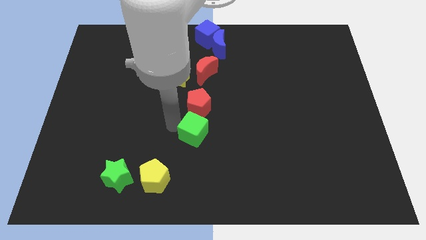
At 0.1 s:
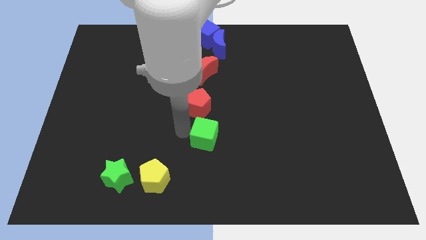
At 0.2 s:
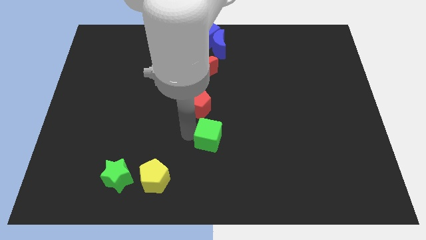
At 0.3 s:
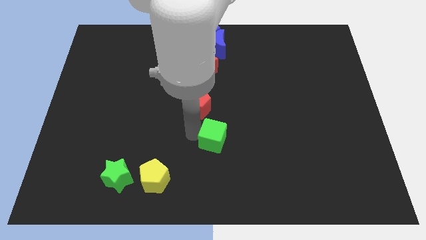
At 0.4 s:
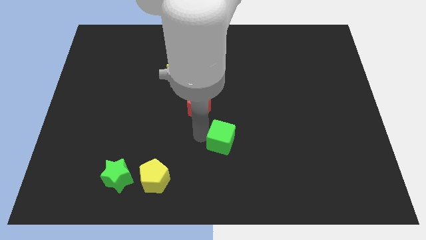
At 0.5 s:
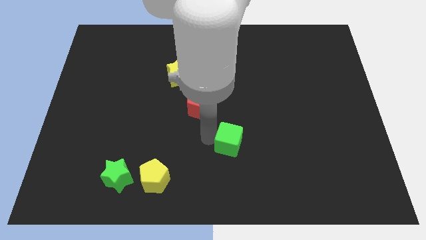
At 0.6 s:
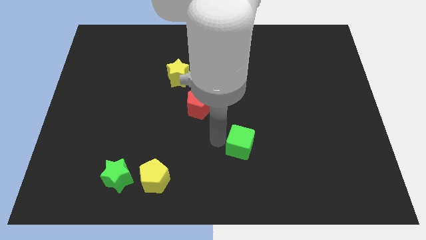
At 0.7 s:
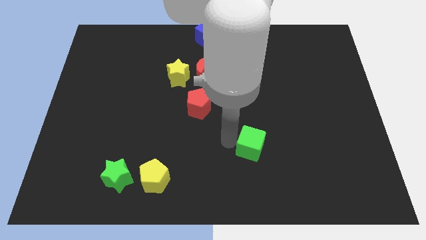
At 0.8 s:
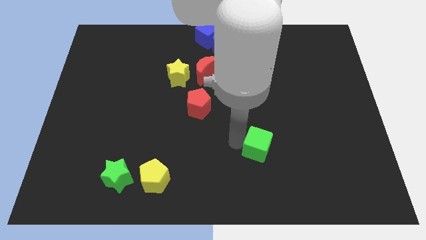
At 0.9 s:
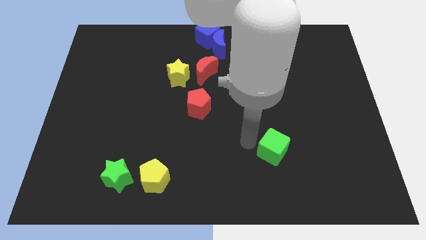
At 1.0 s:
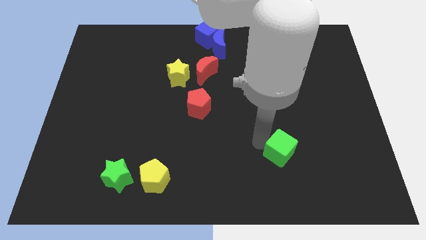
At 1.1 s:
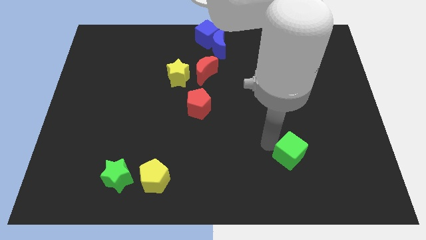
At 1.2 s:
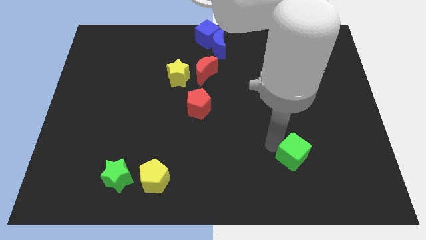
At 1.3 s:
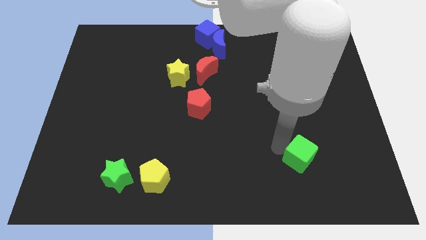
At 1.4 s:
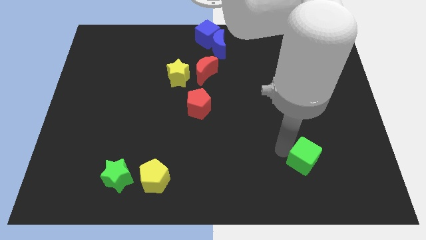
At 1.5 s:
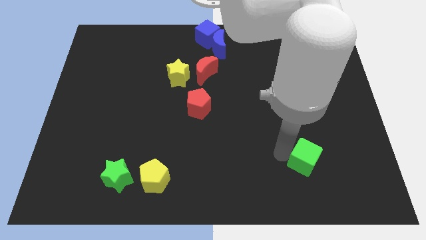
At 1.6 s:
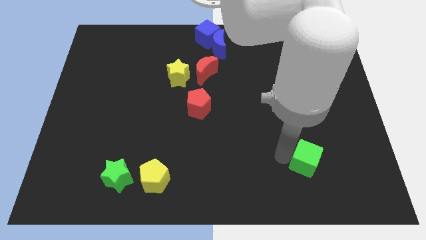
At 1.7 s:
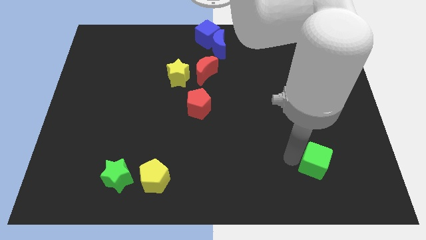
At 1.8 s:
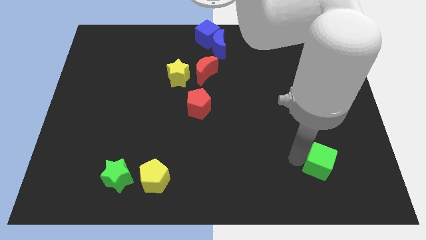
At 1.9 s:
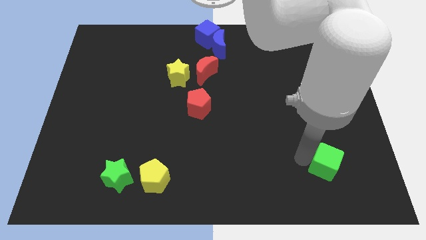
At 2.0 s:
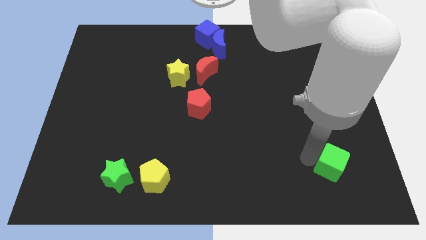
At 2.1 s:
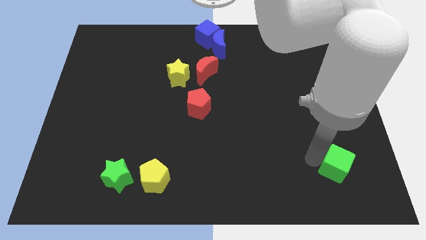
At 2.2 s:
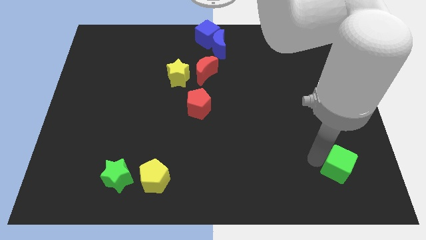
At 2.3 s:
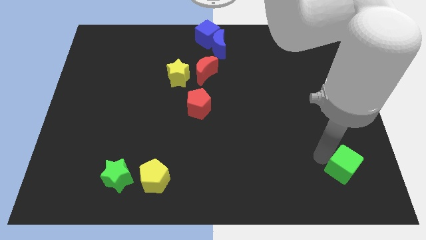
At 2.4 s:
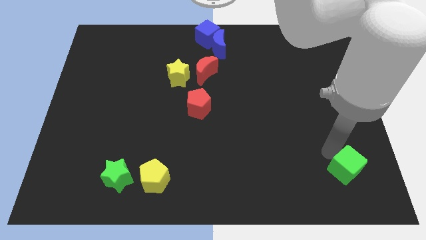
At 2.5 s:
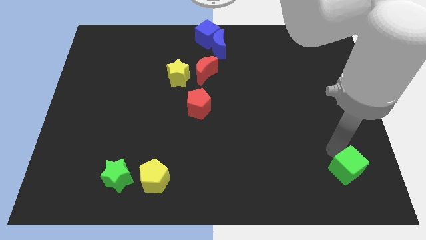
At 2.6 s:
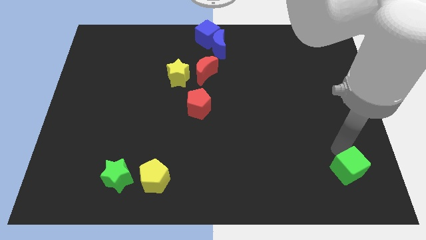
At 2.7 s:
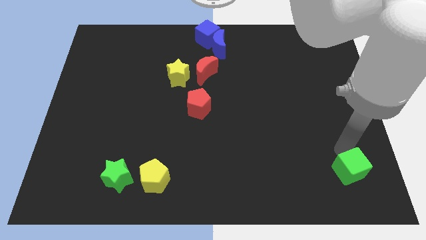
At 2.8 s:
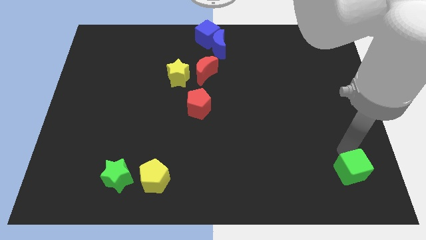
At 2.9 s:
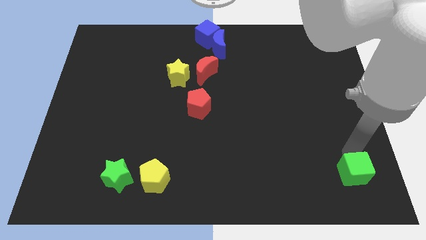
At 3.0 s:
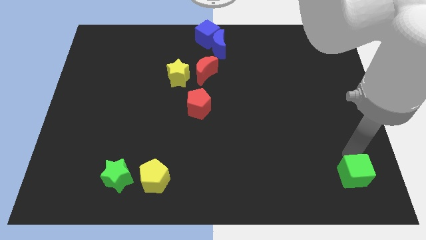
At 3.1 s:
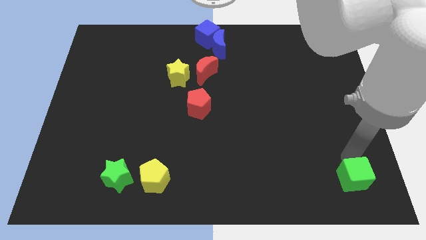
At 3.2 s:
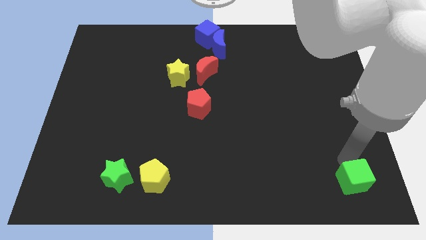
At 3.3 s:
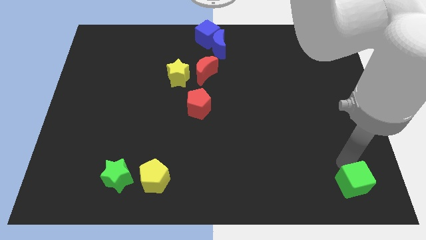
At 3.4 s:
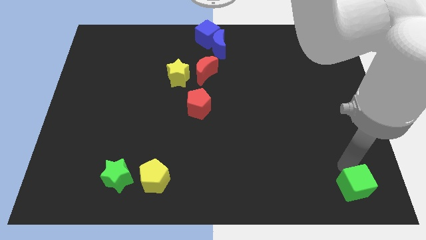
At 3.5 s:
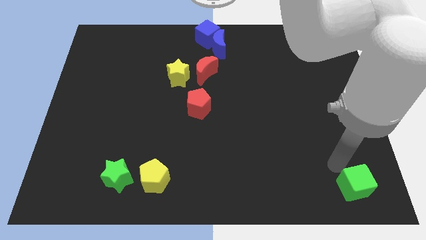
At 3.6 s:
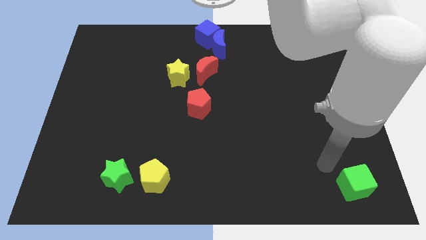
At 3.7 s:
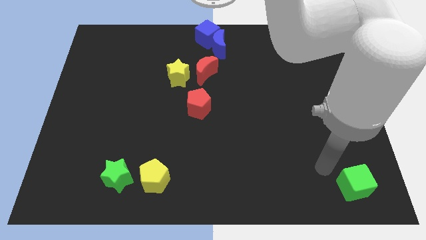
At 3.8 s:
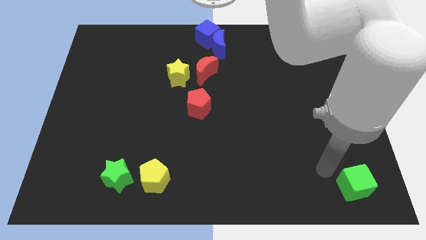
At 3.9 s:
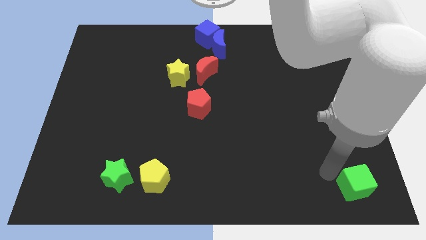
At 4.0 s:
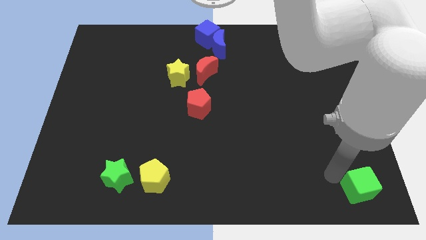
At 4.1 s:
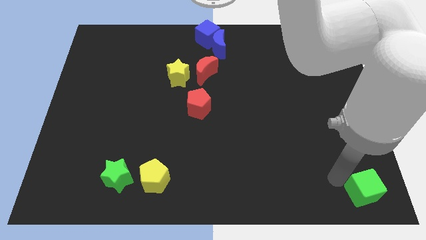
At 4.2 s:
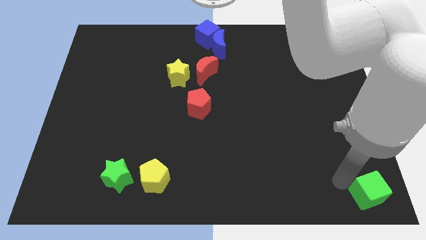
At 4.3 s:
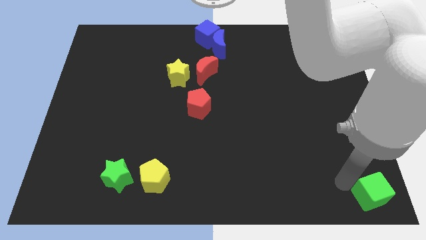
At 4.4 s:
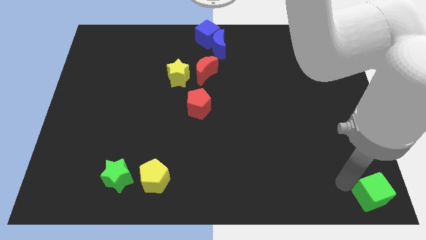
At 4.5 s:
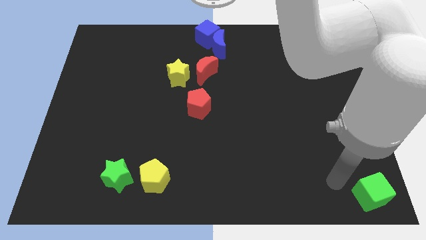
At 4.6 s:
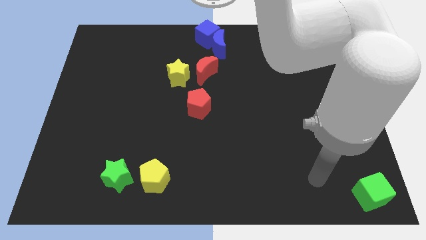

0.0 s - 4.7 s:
place the green cube to the bottom right corner of the board

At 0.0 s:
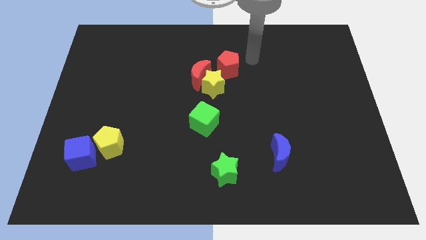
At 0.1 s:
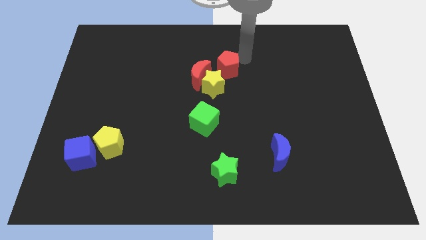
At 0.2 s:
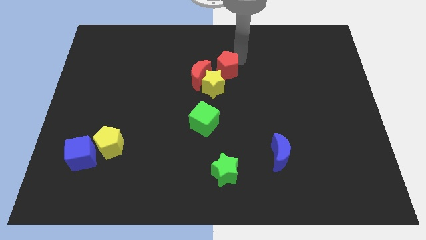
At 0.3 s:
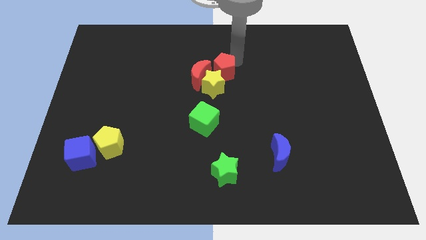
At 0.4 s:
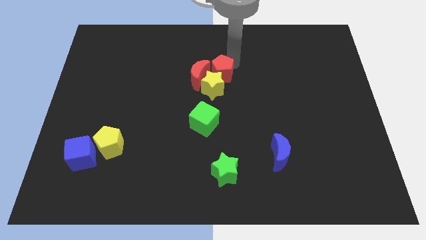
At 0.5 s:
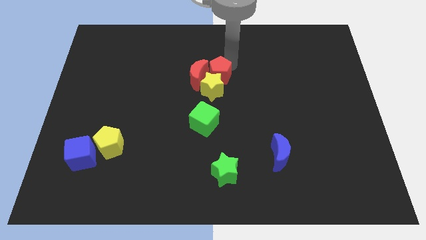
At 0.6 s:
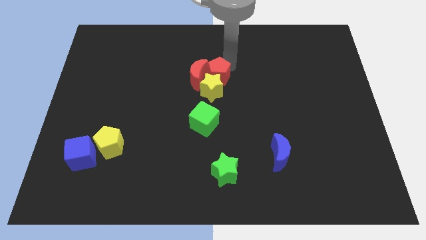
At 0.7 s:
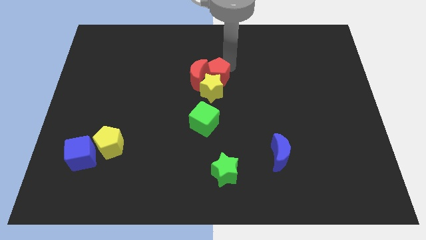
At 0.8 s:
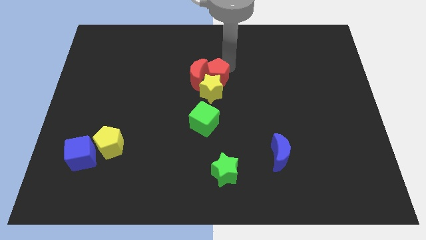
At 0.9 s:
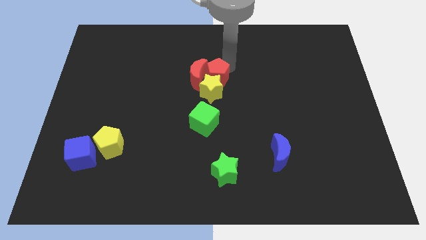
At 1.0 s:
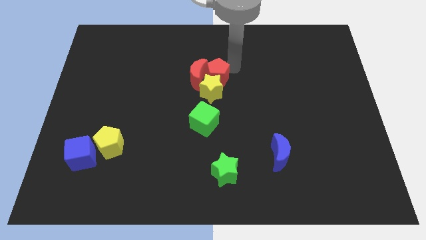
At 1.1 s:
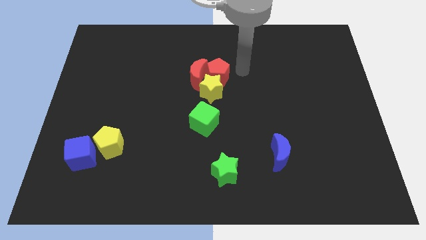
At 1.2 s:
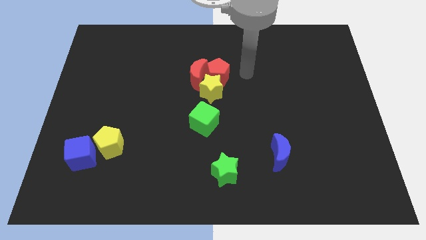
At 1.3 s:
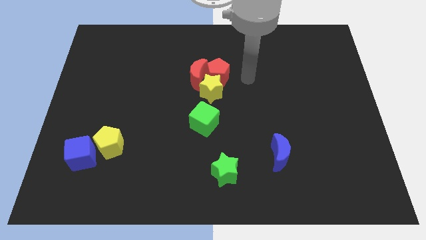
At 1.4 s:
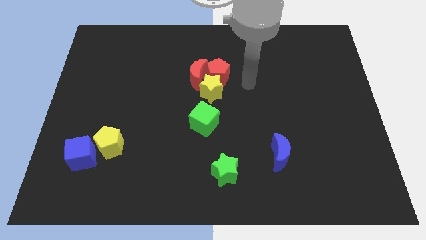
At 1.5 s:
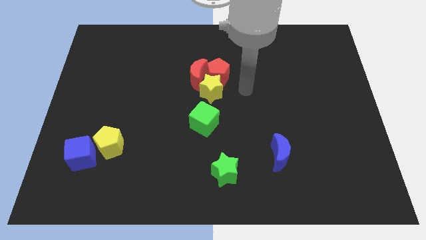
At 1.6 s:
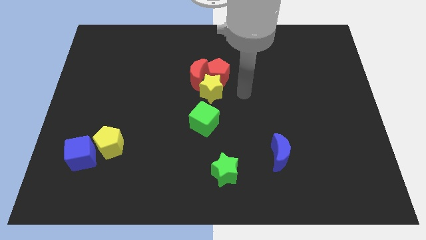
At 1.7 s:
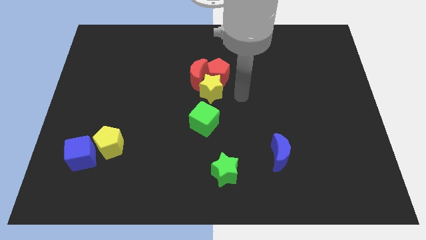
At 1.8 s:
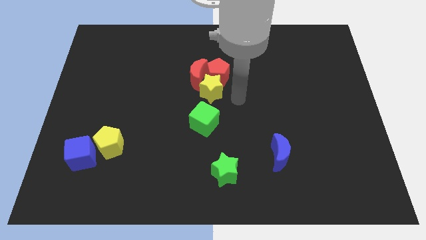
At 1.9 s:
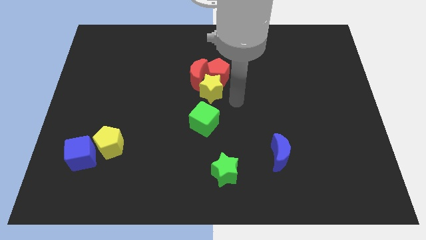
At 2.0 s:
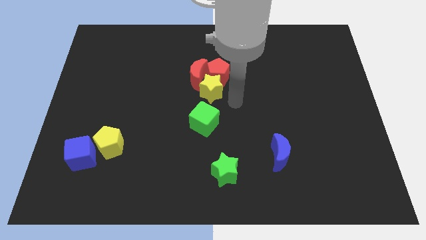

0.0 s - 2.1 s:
push red pentagon close to yellow star

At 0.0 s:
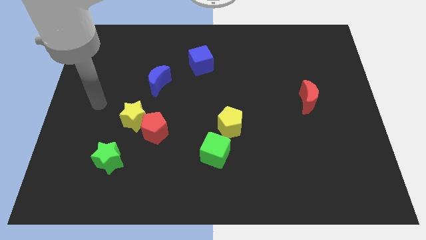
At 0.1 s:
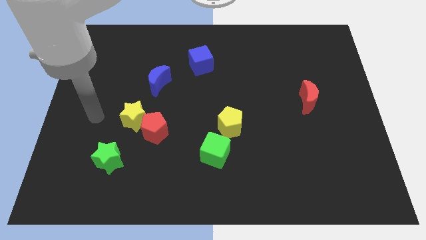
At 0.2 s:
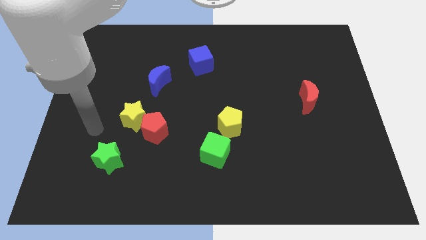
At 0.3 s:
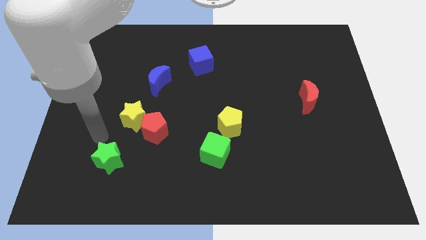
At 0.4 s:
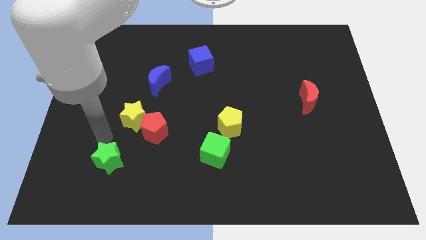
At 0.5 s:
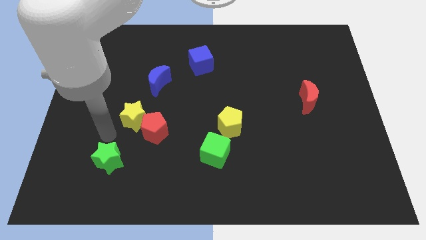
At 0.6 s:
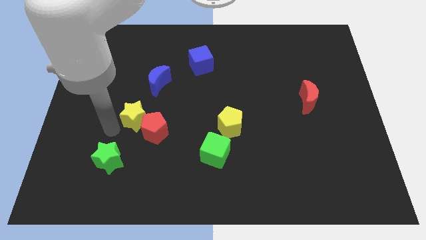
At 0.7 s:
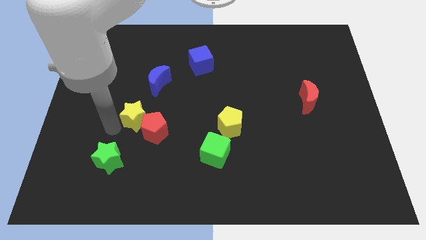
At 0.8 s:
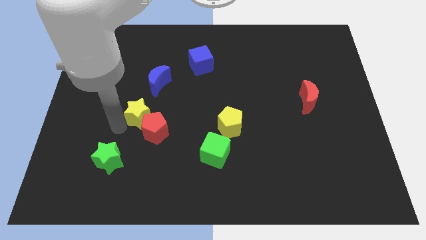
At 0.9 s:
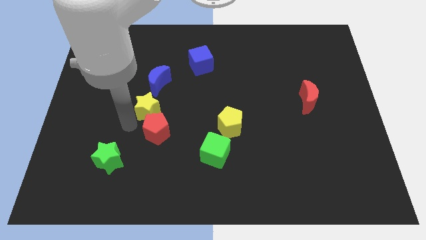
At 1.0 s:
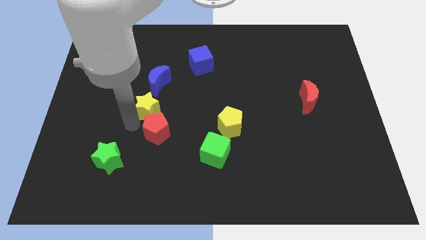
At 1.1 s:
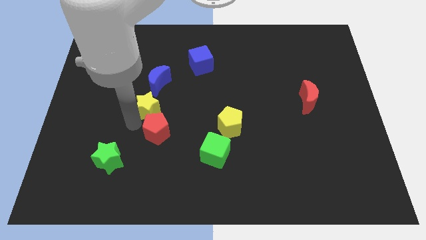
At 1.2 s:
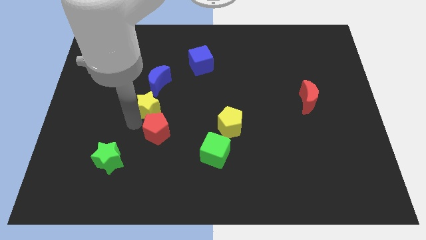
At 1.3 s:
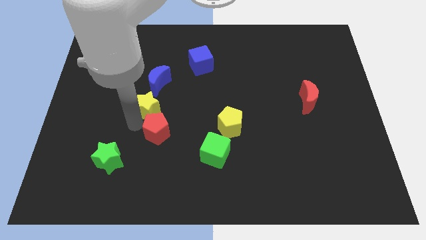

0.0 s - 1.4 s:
place yellow star to the top of red pentagon

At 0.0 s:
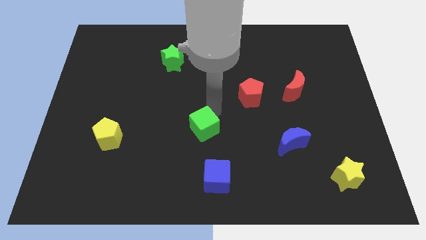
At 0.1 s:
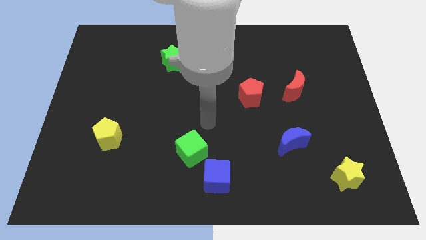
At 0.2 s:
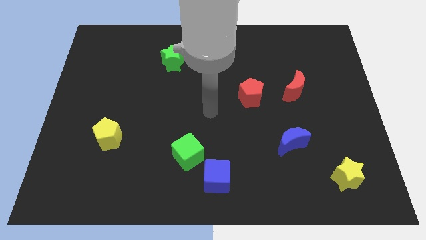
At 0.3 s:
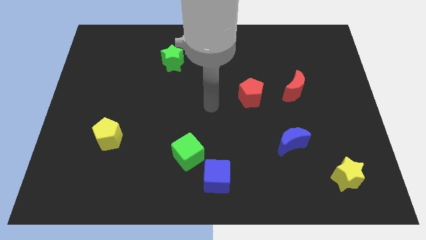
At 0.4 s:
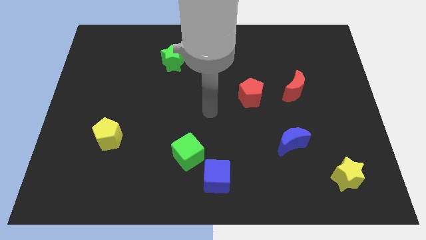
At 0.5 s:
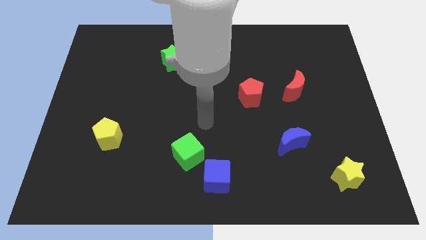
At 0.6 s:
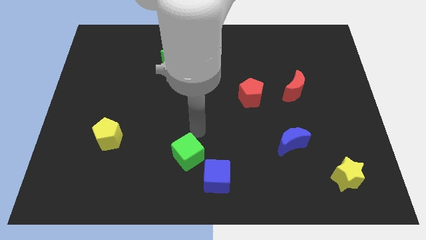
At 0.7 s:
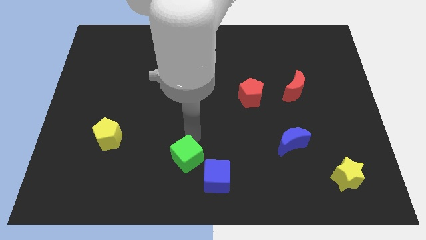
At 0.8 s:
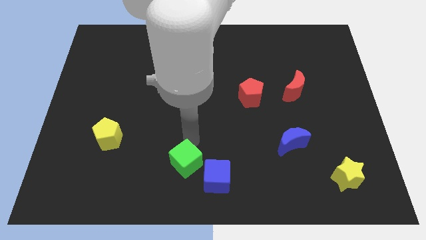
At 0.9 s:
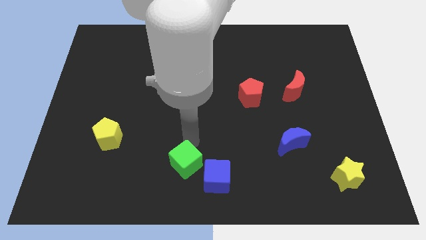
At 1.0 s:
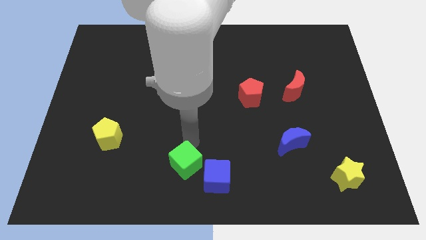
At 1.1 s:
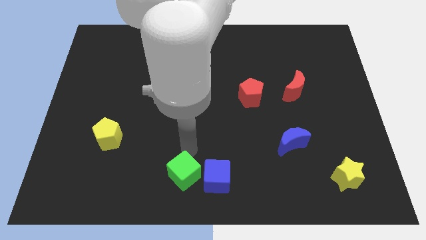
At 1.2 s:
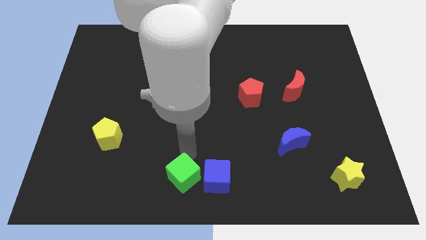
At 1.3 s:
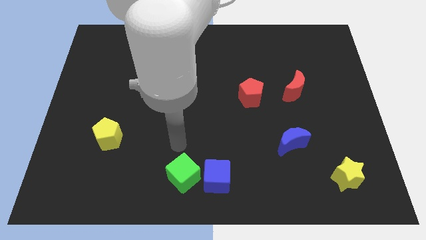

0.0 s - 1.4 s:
place green cube beside blue cube
